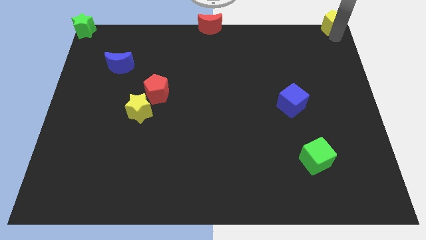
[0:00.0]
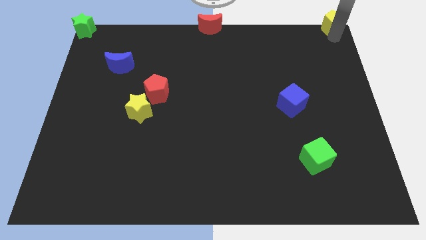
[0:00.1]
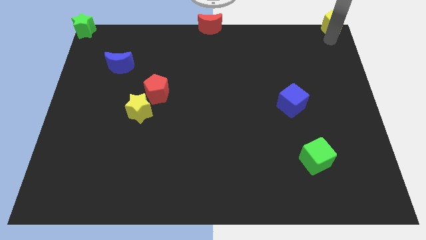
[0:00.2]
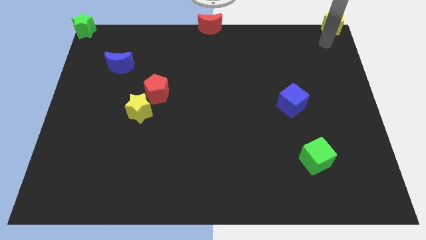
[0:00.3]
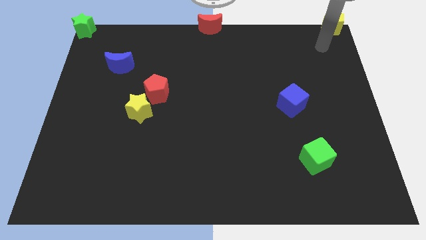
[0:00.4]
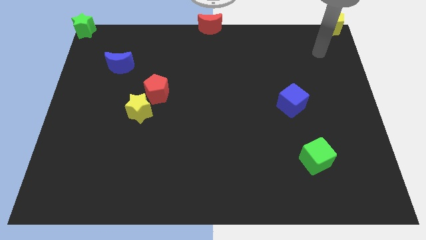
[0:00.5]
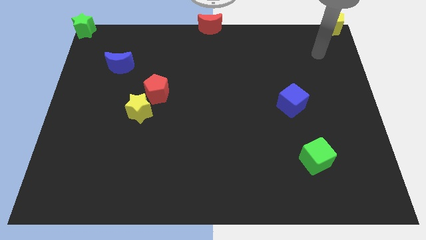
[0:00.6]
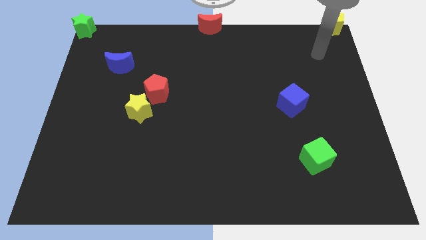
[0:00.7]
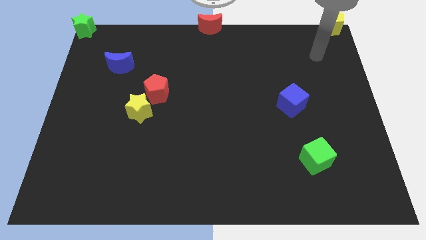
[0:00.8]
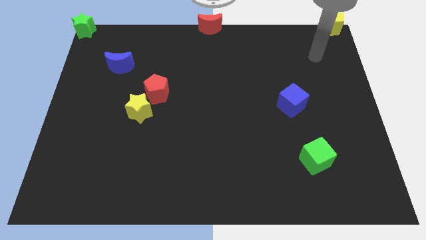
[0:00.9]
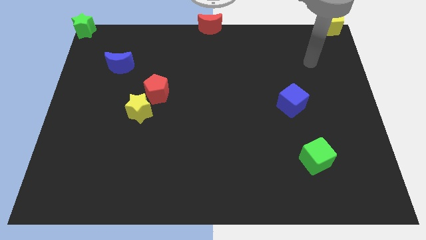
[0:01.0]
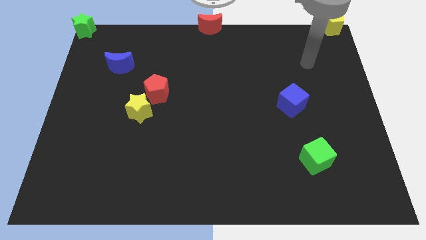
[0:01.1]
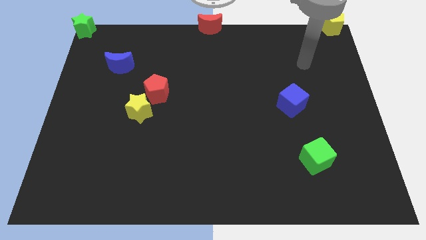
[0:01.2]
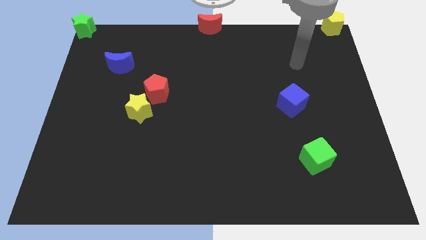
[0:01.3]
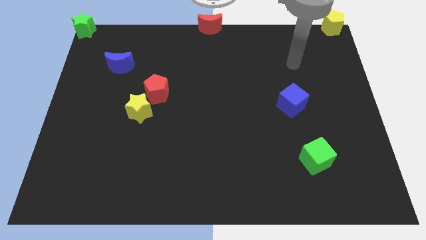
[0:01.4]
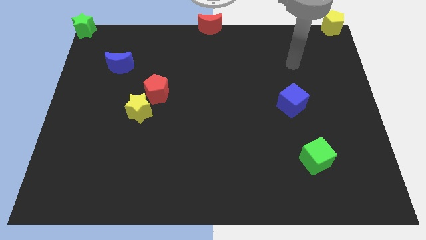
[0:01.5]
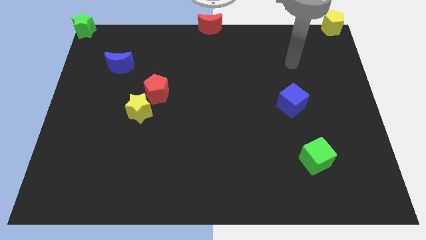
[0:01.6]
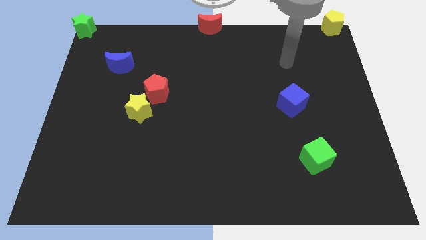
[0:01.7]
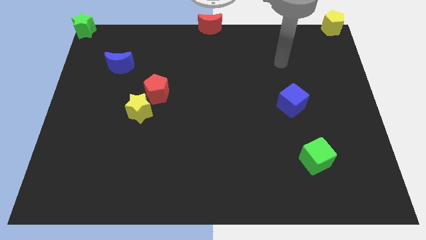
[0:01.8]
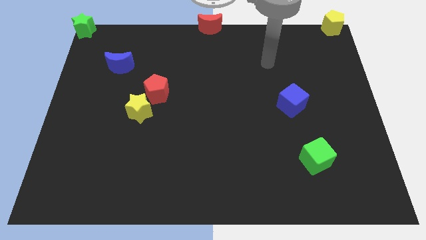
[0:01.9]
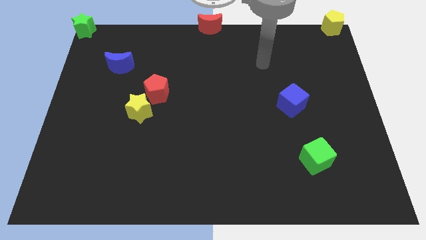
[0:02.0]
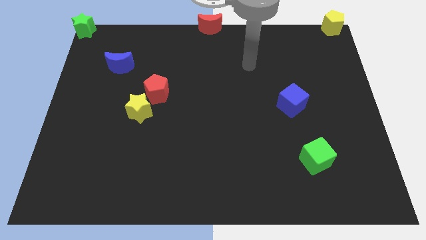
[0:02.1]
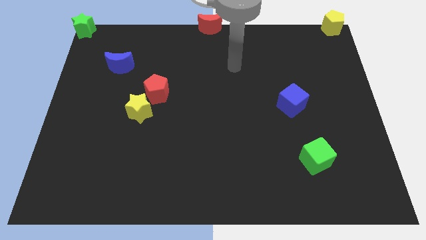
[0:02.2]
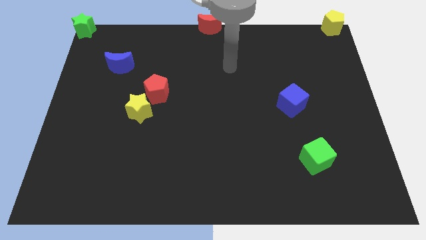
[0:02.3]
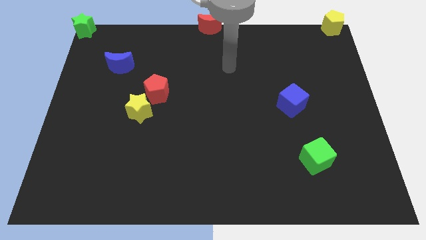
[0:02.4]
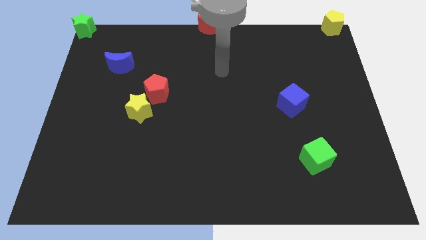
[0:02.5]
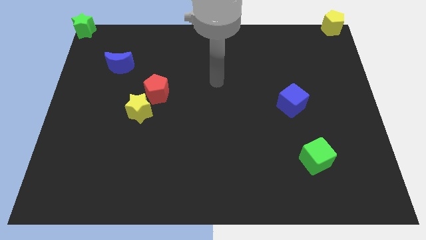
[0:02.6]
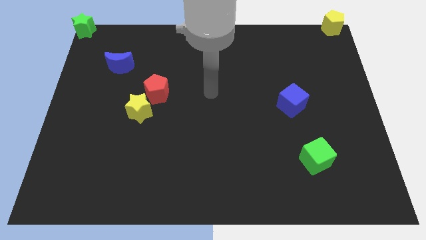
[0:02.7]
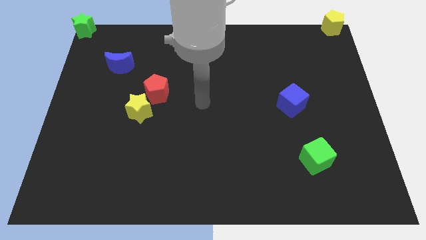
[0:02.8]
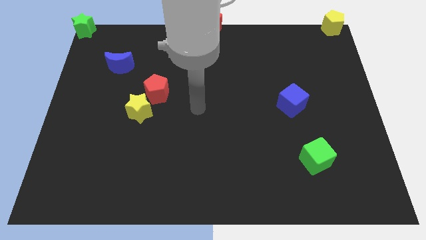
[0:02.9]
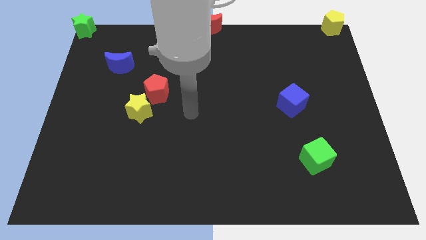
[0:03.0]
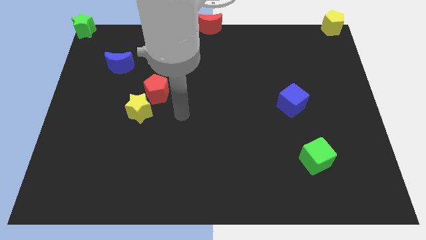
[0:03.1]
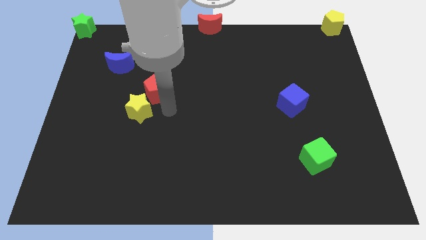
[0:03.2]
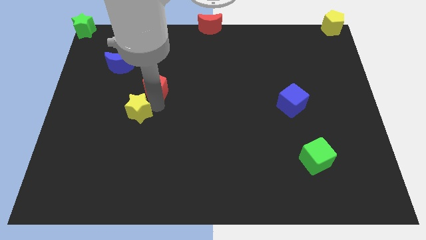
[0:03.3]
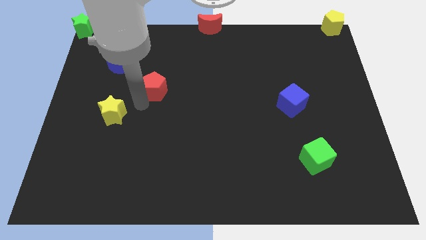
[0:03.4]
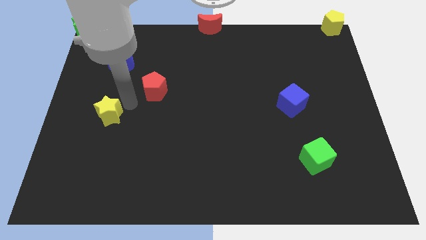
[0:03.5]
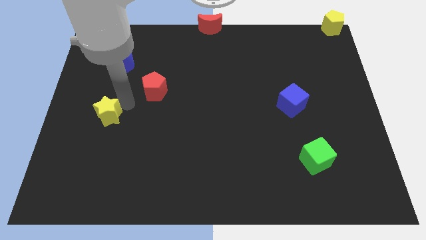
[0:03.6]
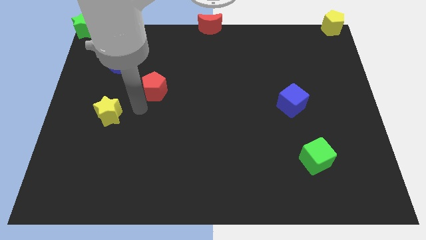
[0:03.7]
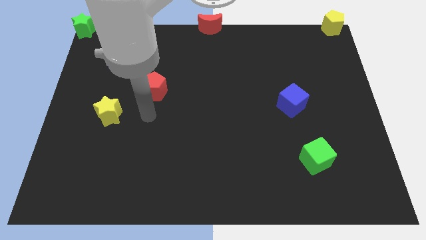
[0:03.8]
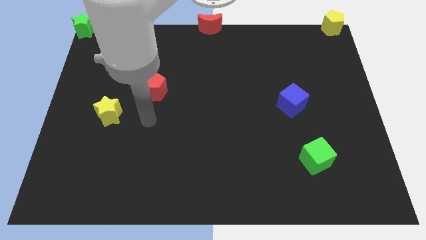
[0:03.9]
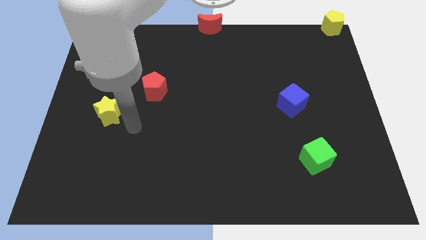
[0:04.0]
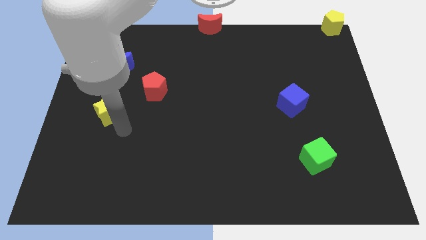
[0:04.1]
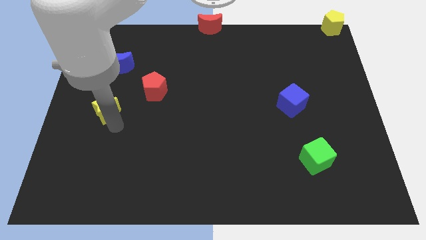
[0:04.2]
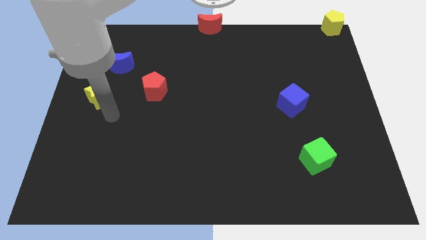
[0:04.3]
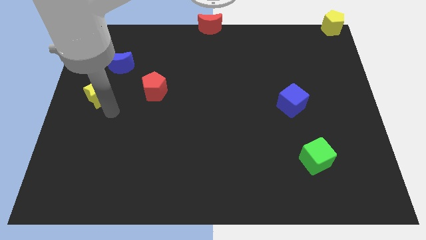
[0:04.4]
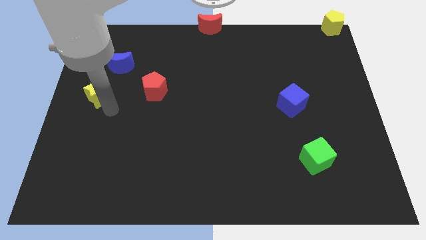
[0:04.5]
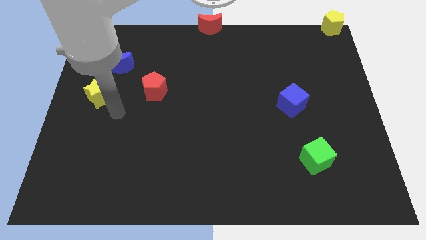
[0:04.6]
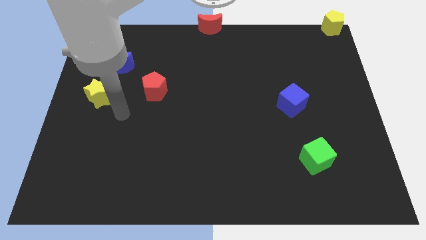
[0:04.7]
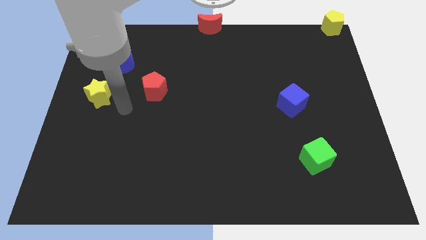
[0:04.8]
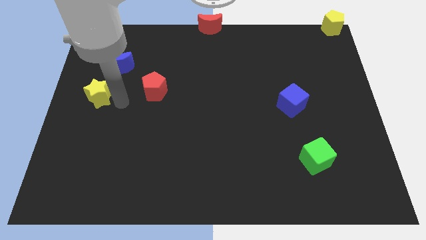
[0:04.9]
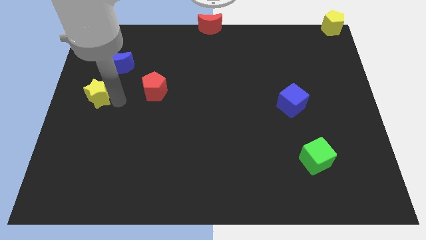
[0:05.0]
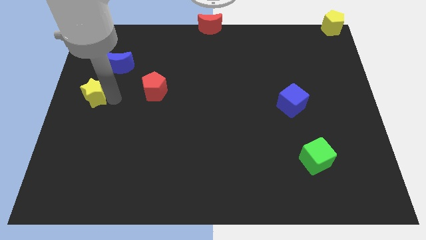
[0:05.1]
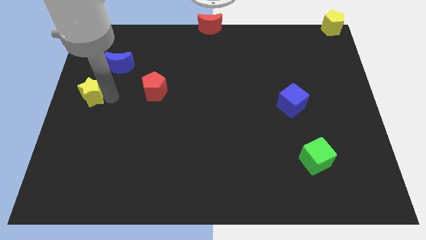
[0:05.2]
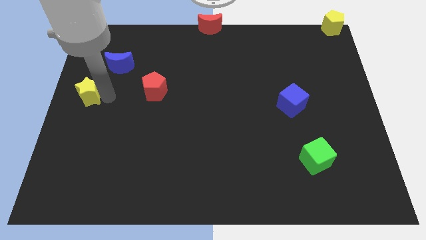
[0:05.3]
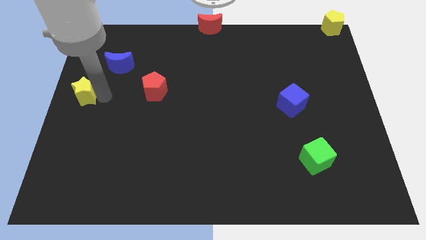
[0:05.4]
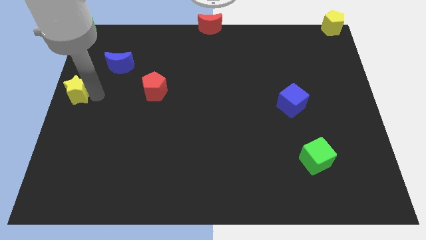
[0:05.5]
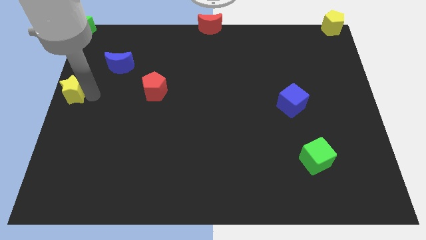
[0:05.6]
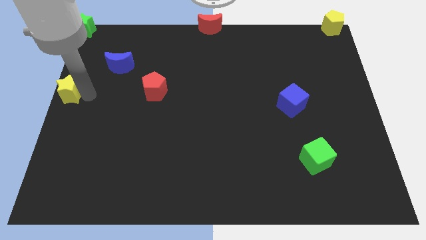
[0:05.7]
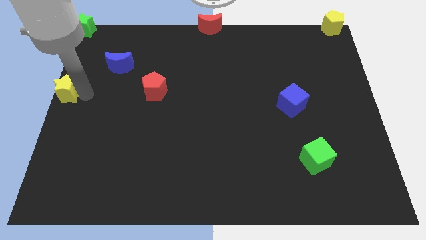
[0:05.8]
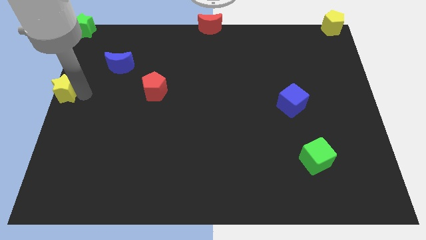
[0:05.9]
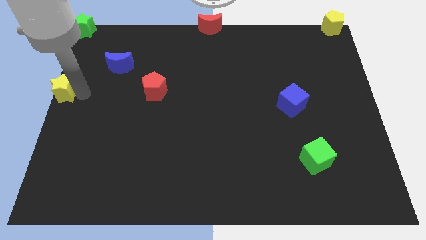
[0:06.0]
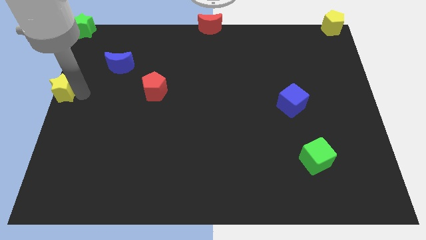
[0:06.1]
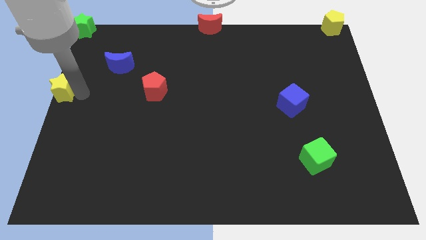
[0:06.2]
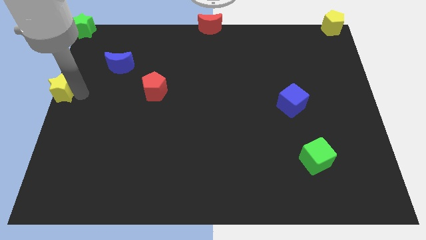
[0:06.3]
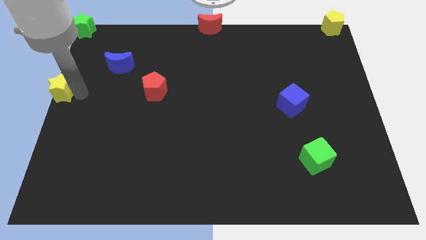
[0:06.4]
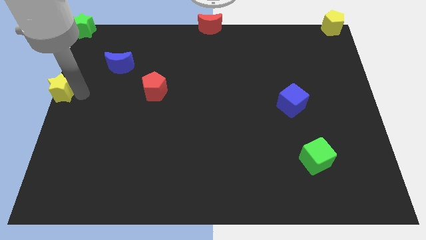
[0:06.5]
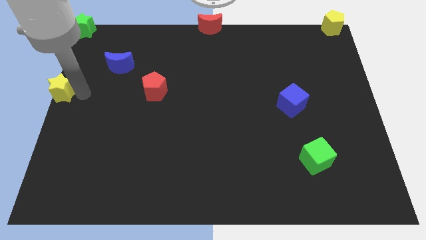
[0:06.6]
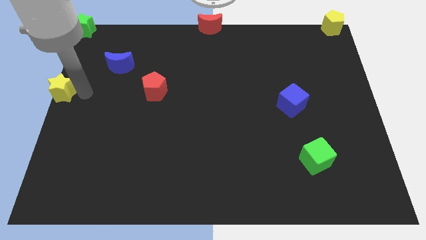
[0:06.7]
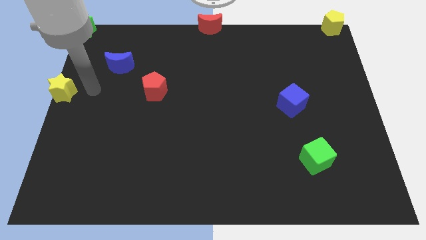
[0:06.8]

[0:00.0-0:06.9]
move yellow star to the left centre of the board

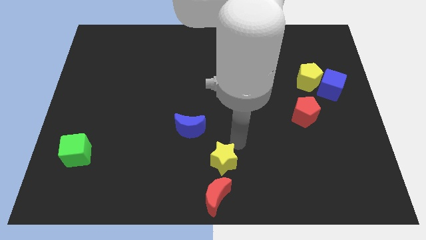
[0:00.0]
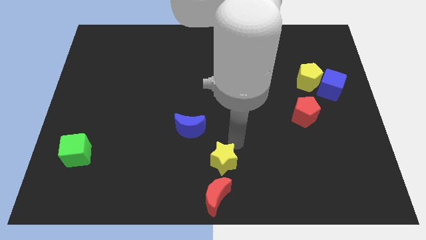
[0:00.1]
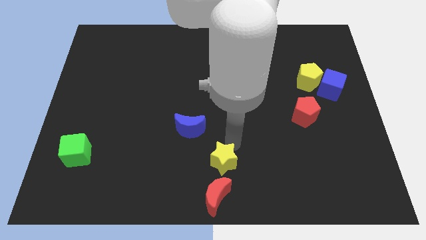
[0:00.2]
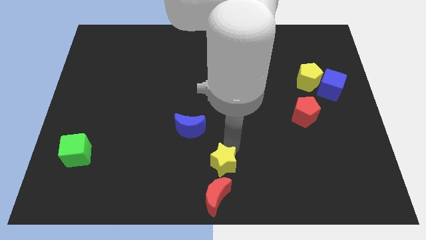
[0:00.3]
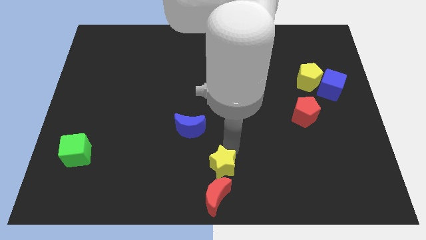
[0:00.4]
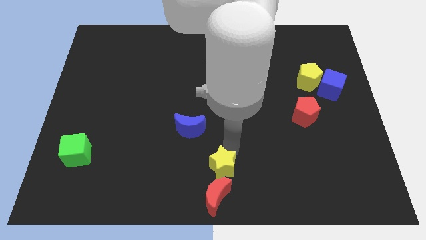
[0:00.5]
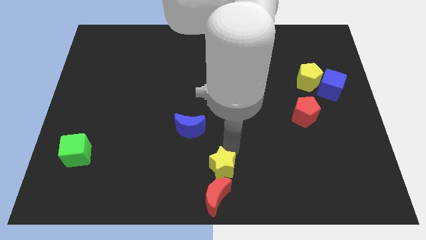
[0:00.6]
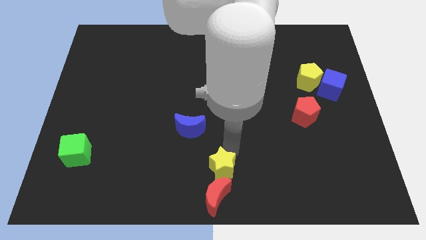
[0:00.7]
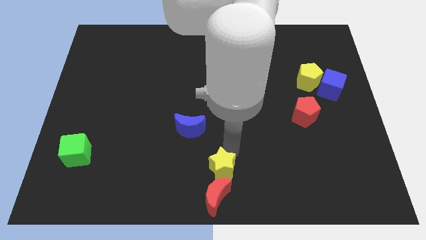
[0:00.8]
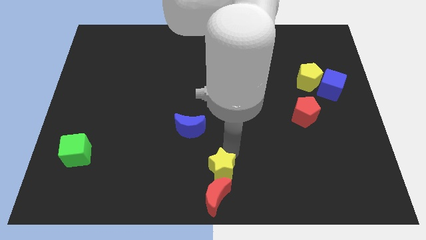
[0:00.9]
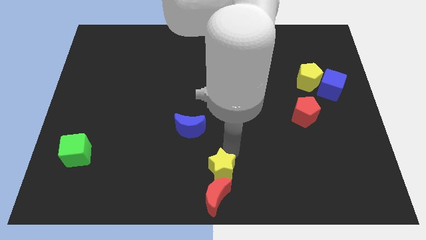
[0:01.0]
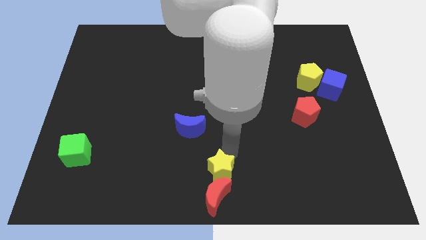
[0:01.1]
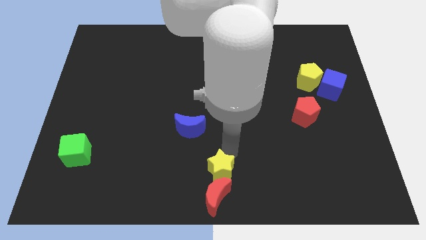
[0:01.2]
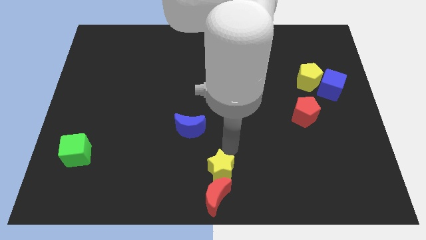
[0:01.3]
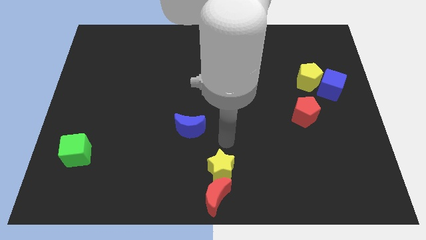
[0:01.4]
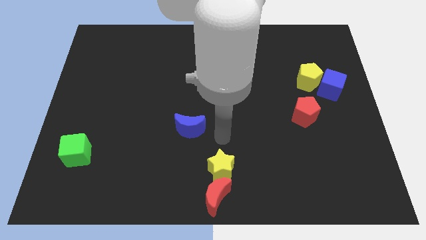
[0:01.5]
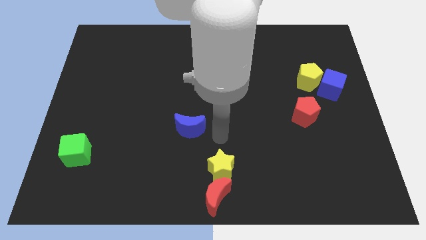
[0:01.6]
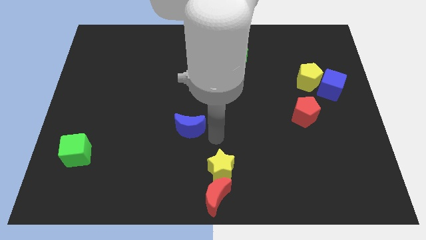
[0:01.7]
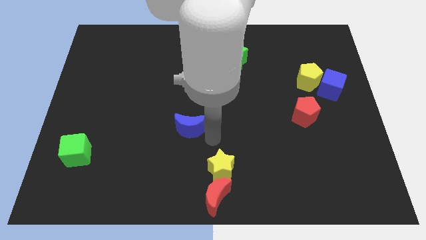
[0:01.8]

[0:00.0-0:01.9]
push yellow star slightly down

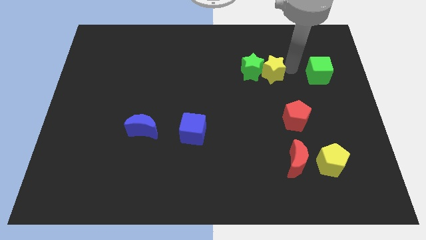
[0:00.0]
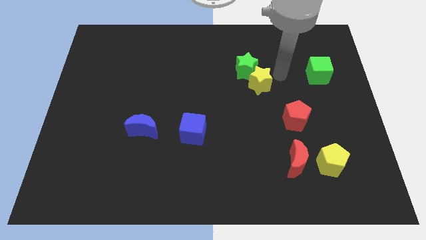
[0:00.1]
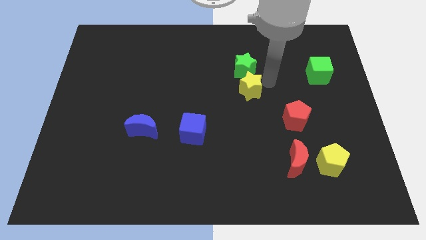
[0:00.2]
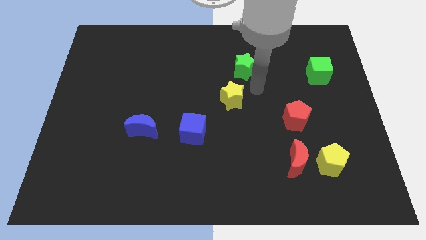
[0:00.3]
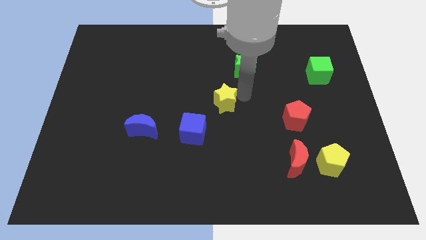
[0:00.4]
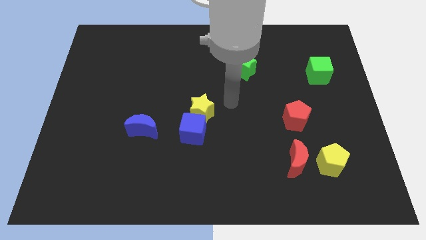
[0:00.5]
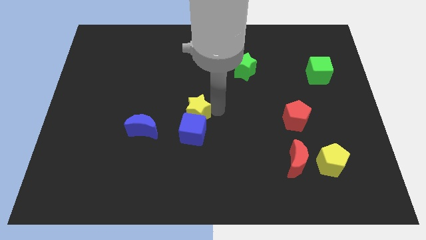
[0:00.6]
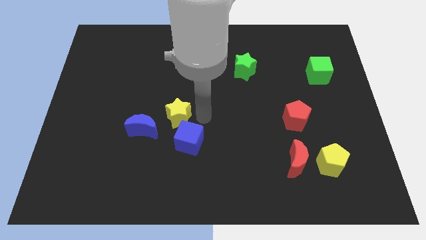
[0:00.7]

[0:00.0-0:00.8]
place the yellow star above the blue cube
